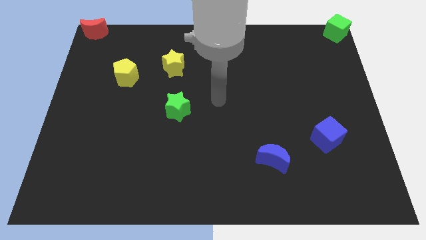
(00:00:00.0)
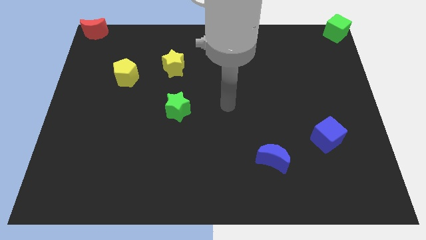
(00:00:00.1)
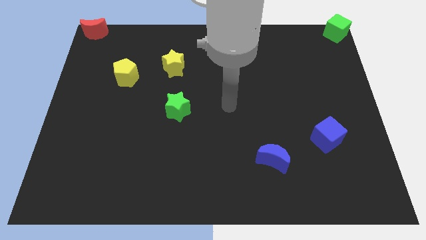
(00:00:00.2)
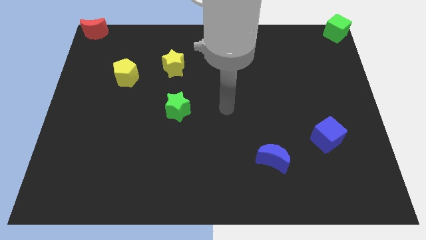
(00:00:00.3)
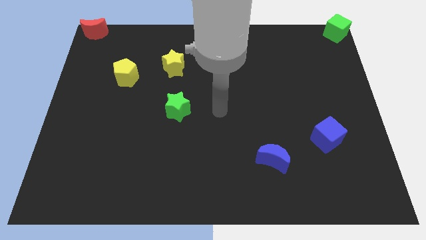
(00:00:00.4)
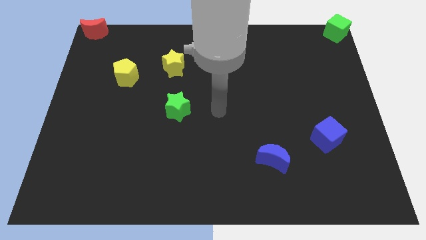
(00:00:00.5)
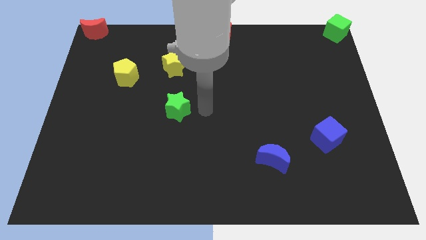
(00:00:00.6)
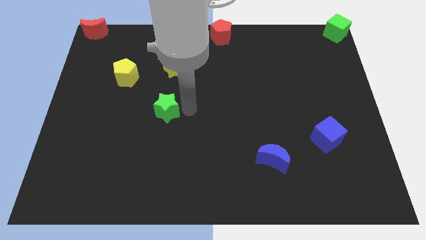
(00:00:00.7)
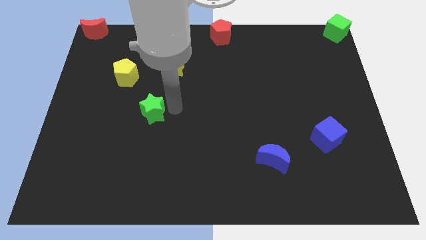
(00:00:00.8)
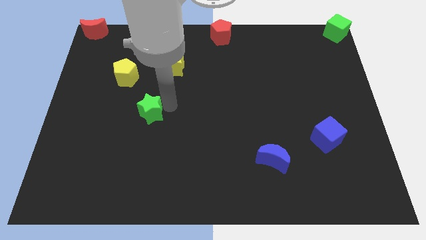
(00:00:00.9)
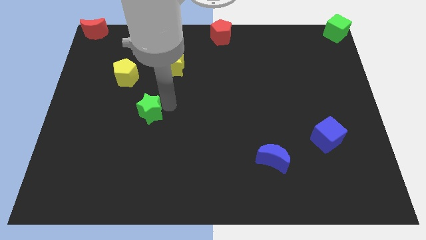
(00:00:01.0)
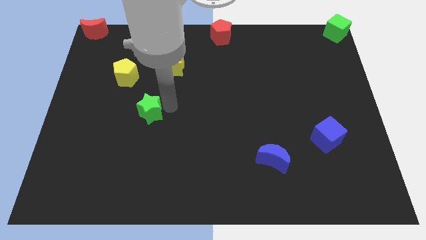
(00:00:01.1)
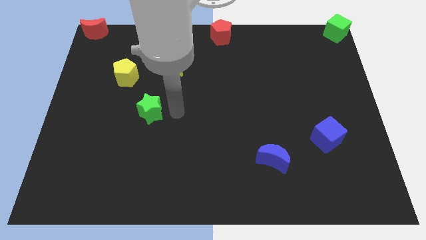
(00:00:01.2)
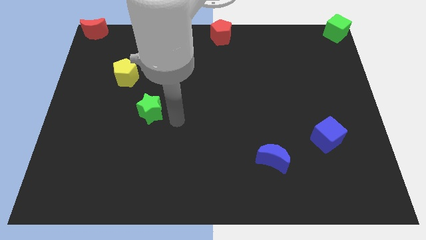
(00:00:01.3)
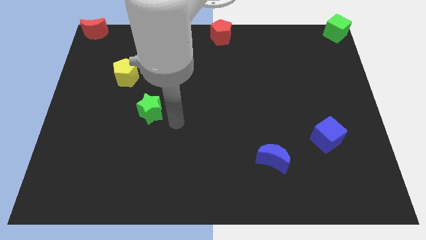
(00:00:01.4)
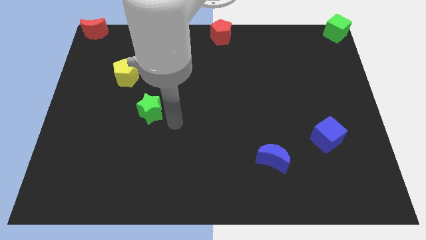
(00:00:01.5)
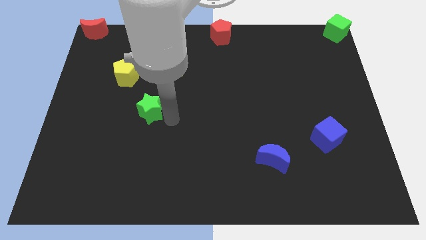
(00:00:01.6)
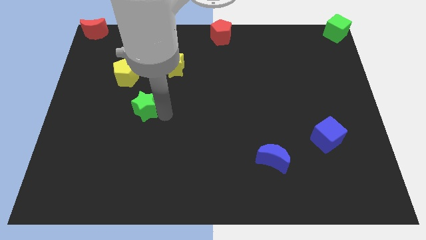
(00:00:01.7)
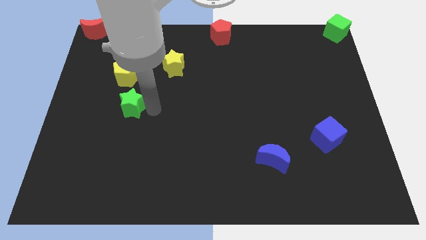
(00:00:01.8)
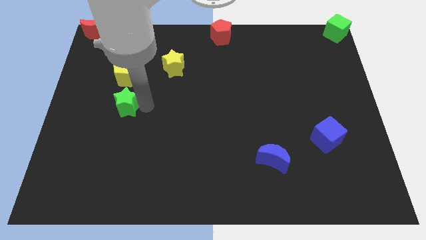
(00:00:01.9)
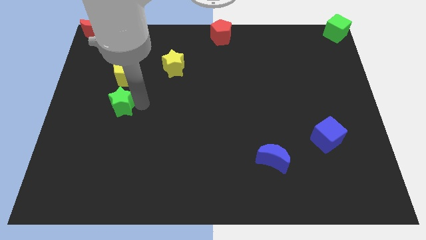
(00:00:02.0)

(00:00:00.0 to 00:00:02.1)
push the green star below the yellow pentagon

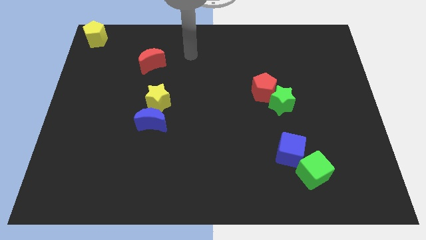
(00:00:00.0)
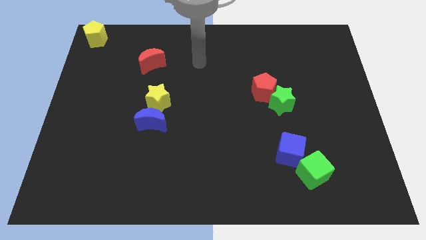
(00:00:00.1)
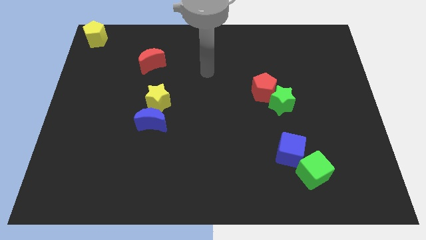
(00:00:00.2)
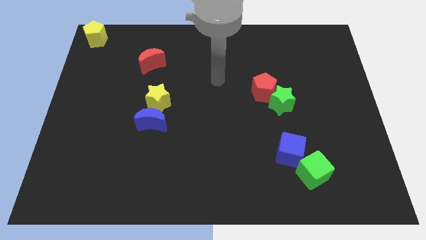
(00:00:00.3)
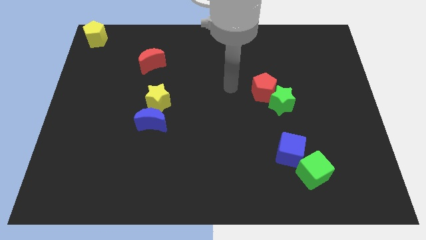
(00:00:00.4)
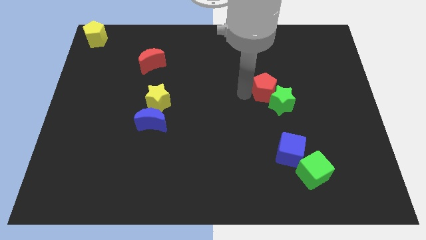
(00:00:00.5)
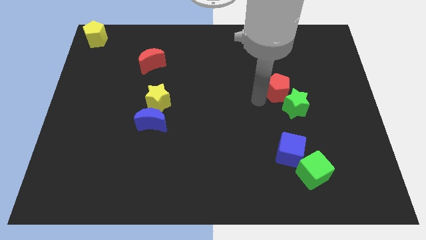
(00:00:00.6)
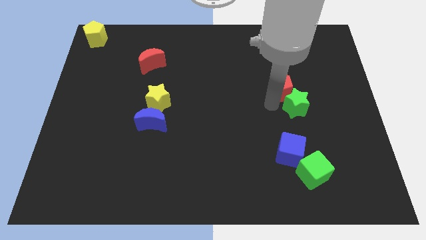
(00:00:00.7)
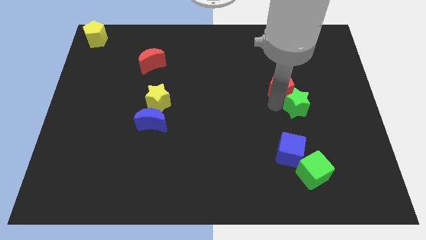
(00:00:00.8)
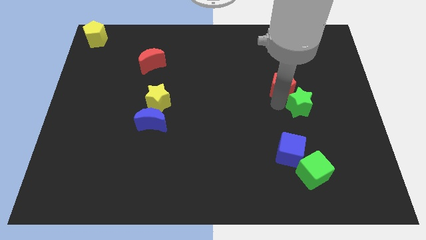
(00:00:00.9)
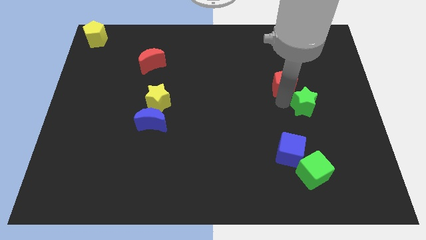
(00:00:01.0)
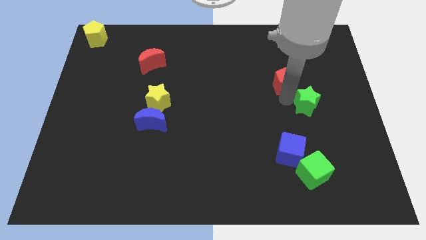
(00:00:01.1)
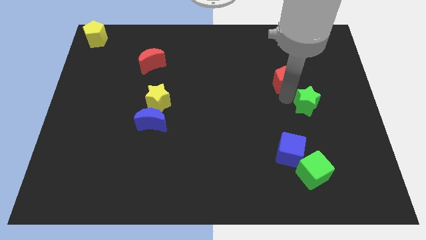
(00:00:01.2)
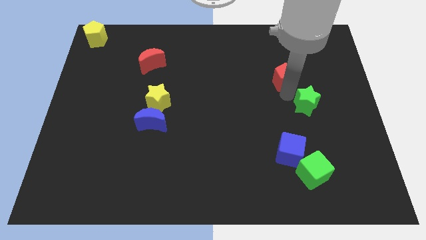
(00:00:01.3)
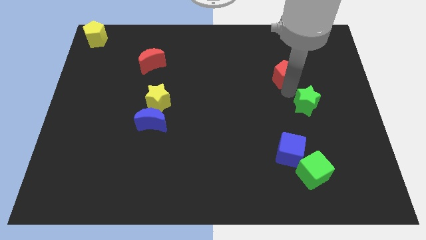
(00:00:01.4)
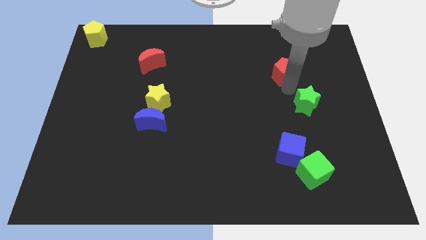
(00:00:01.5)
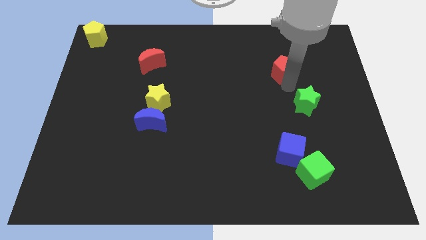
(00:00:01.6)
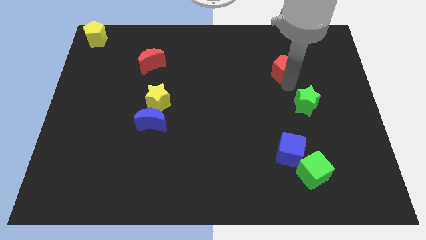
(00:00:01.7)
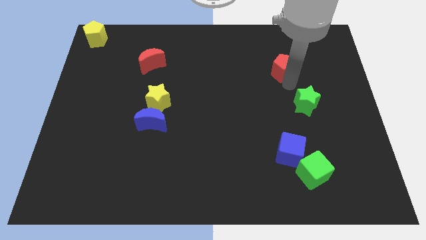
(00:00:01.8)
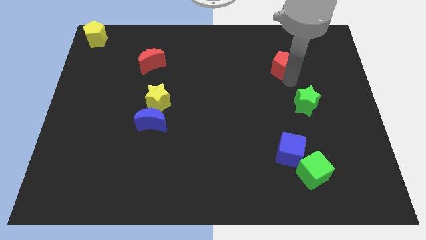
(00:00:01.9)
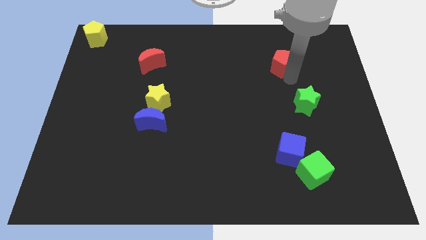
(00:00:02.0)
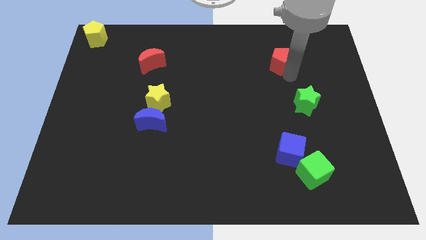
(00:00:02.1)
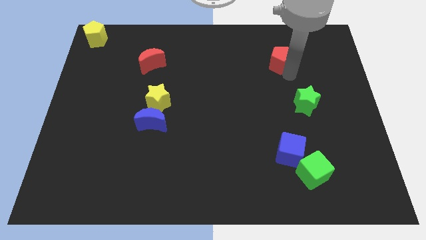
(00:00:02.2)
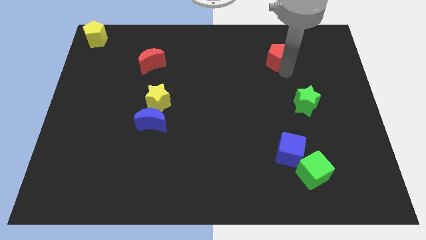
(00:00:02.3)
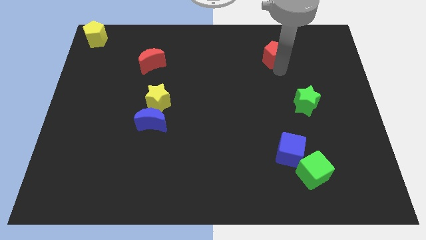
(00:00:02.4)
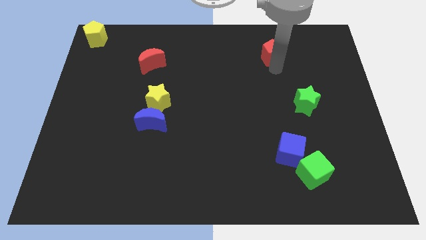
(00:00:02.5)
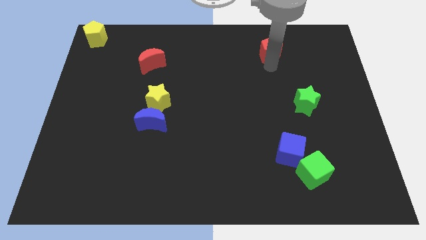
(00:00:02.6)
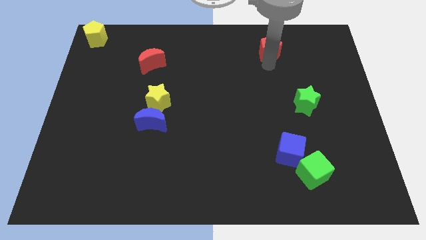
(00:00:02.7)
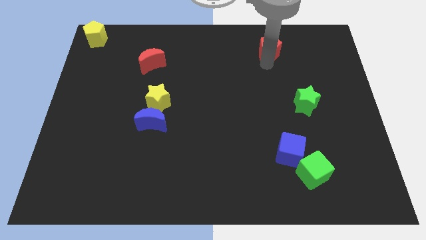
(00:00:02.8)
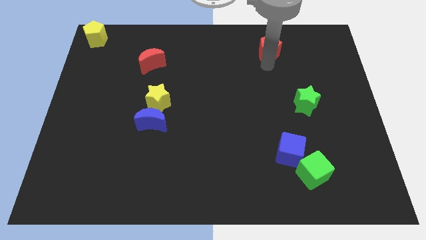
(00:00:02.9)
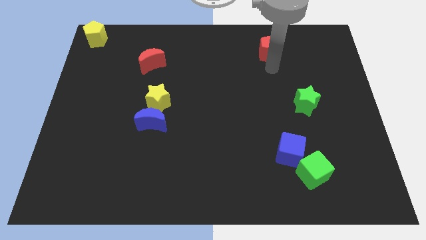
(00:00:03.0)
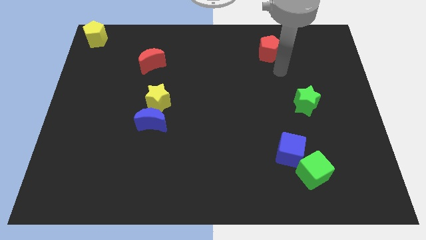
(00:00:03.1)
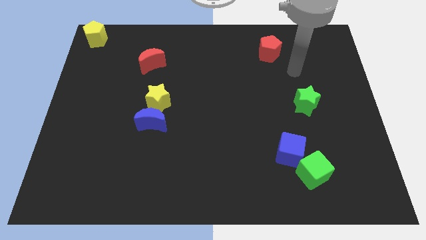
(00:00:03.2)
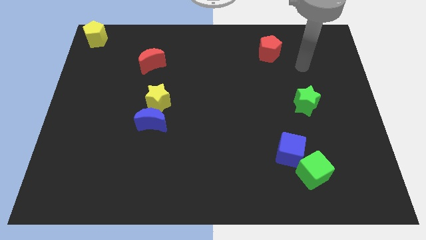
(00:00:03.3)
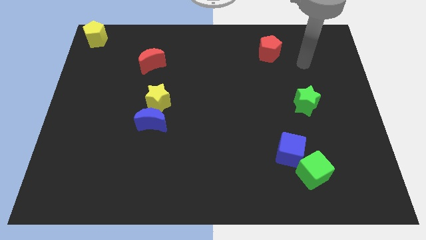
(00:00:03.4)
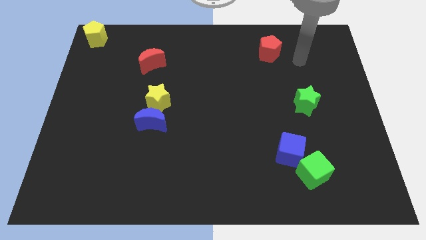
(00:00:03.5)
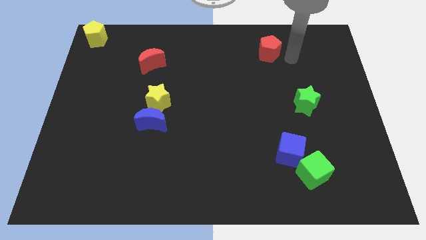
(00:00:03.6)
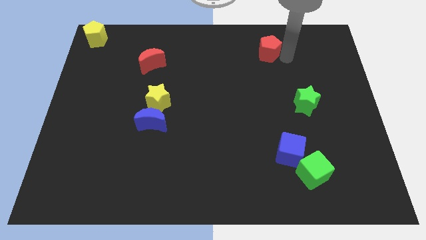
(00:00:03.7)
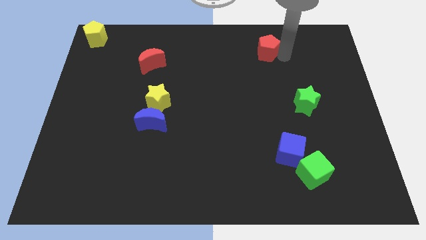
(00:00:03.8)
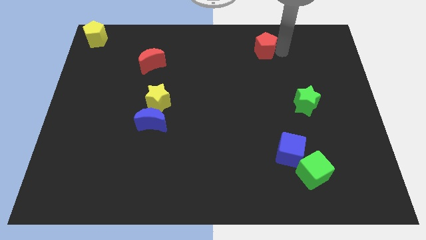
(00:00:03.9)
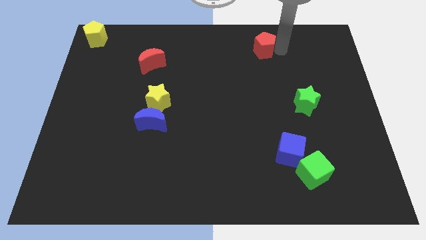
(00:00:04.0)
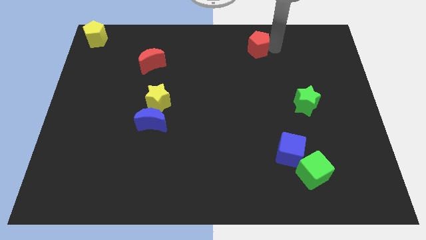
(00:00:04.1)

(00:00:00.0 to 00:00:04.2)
separate the red pentagon from the green star

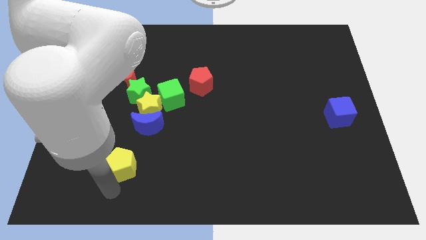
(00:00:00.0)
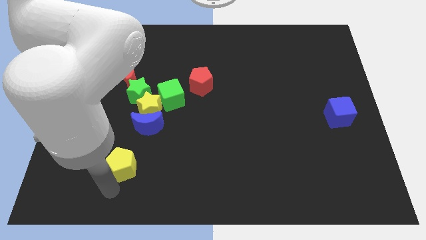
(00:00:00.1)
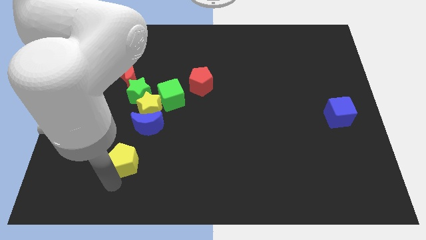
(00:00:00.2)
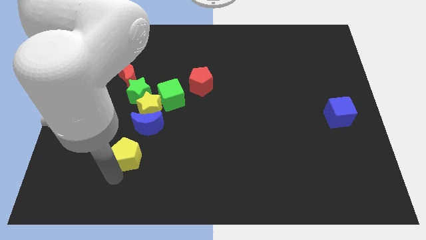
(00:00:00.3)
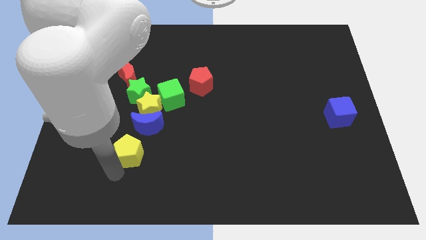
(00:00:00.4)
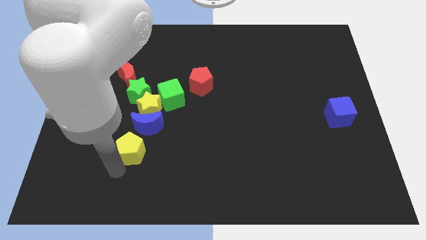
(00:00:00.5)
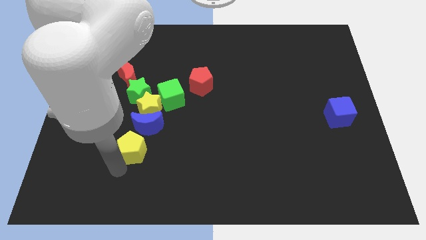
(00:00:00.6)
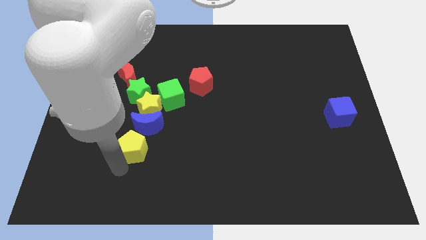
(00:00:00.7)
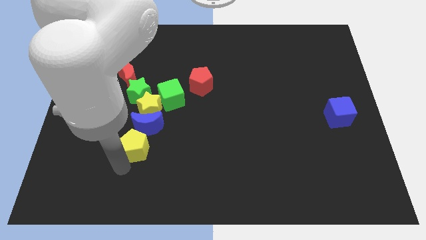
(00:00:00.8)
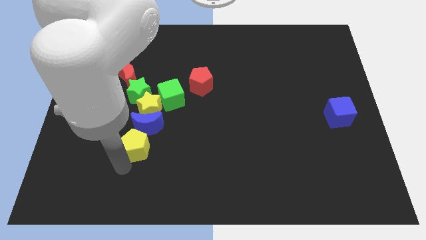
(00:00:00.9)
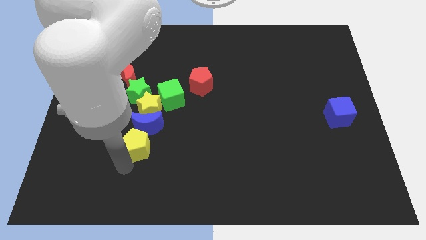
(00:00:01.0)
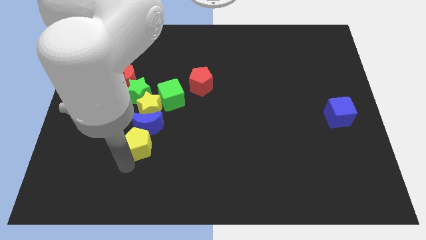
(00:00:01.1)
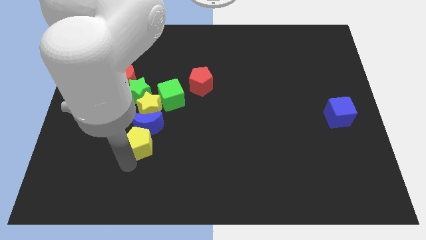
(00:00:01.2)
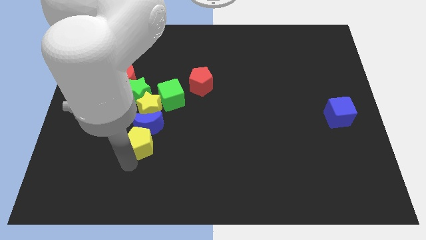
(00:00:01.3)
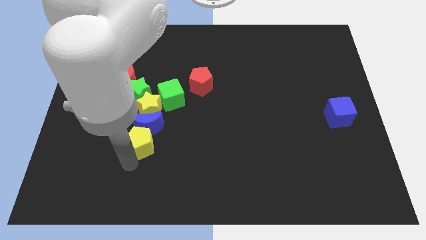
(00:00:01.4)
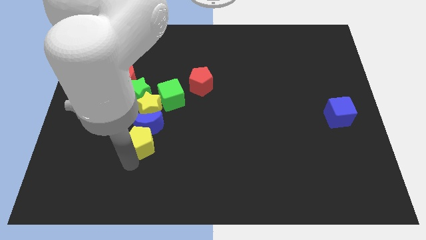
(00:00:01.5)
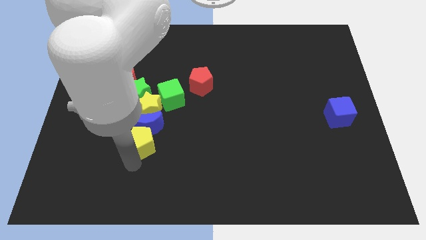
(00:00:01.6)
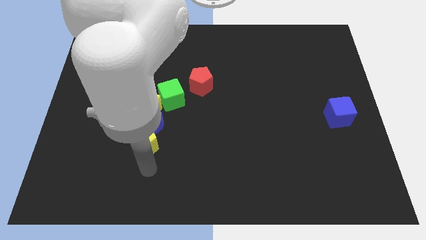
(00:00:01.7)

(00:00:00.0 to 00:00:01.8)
place the yellow pentagon to the bottom of the blue crescent

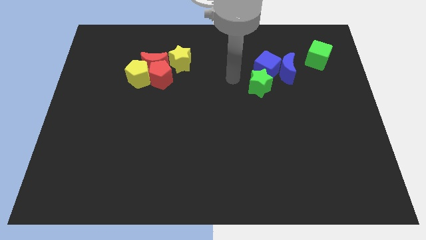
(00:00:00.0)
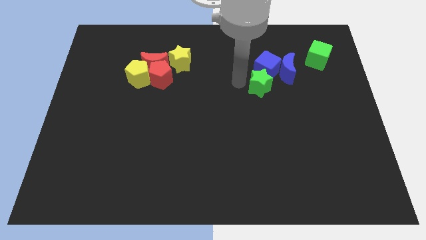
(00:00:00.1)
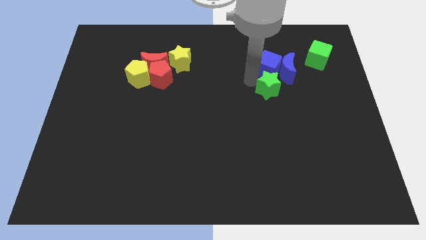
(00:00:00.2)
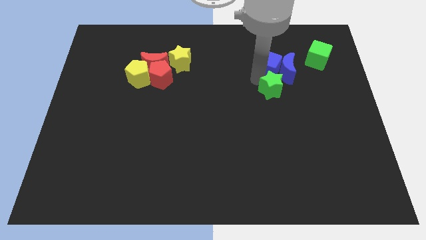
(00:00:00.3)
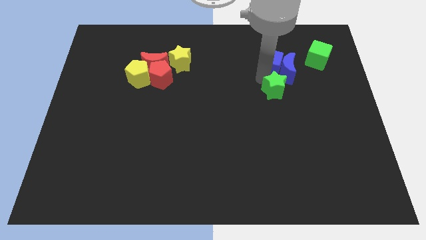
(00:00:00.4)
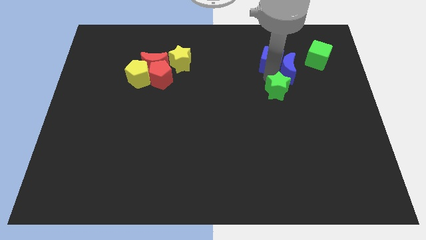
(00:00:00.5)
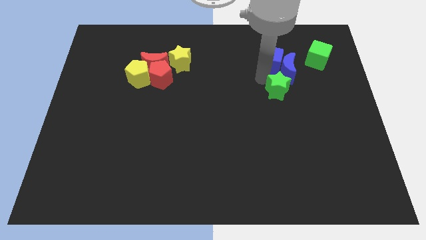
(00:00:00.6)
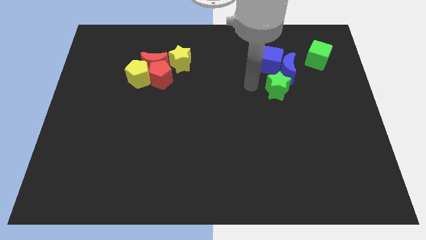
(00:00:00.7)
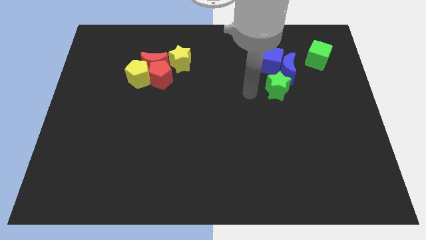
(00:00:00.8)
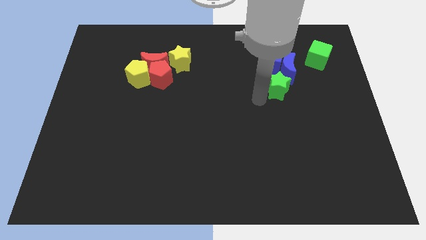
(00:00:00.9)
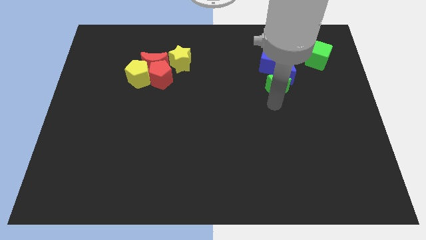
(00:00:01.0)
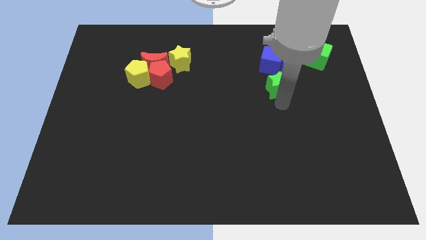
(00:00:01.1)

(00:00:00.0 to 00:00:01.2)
tap on the bottom side of green star
